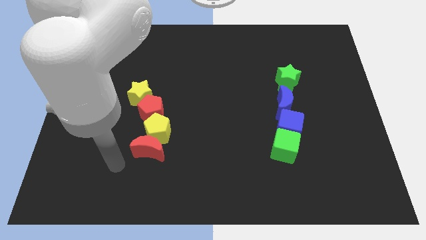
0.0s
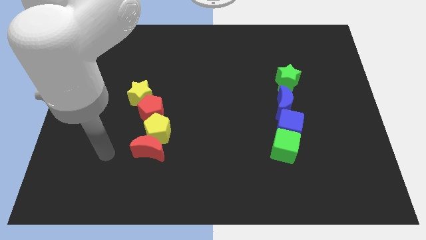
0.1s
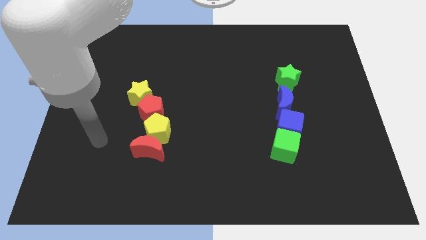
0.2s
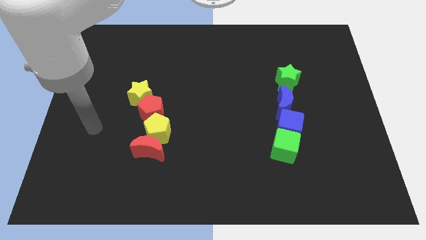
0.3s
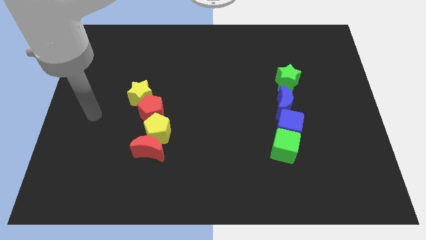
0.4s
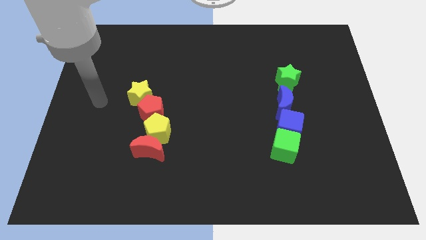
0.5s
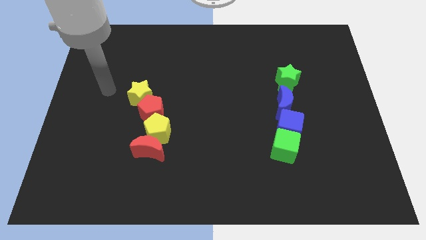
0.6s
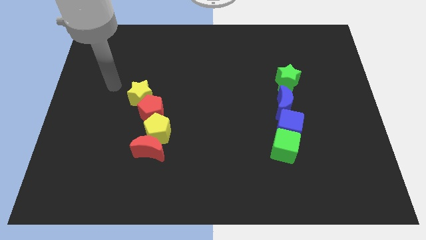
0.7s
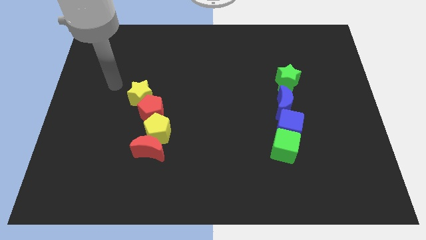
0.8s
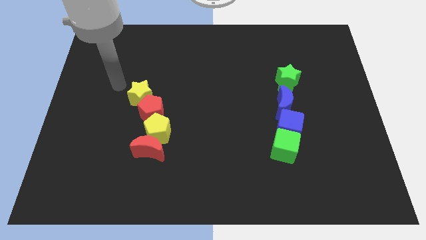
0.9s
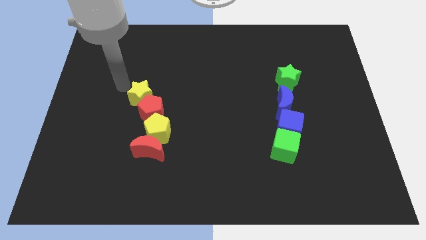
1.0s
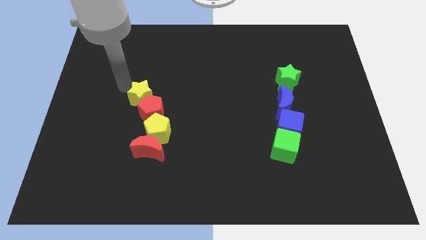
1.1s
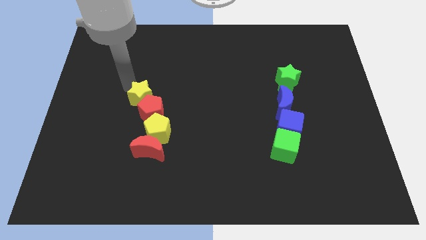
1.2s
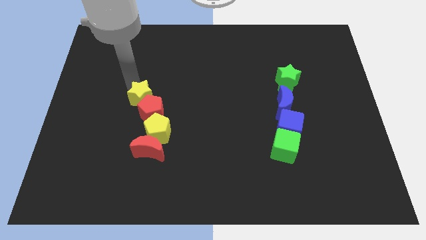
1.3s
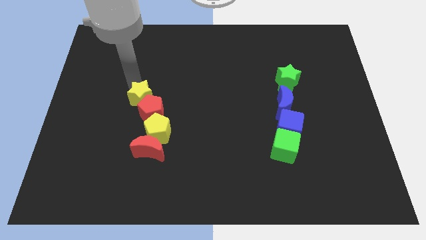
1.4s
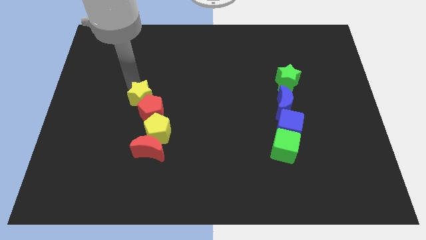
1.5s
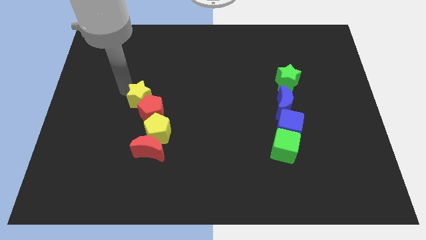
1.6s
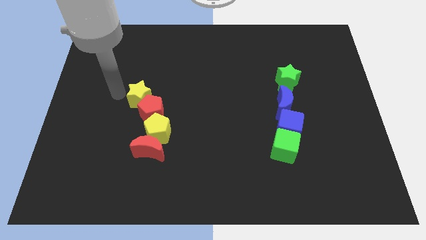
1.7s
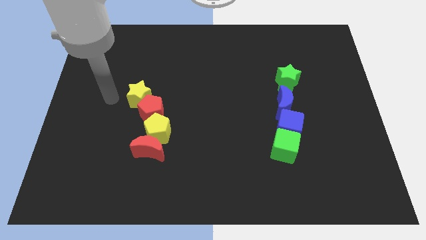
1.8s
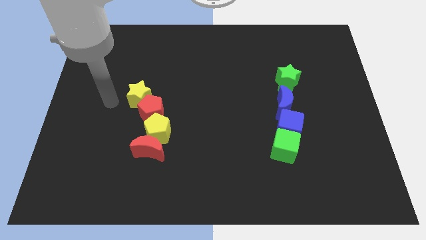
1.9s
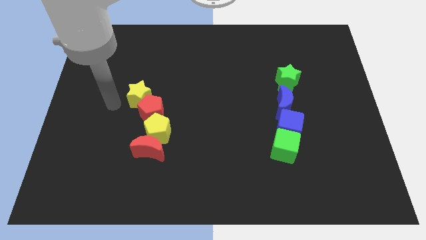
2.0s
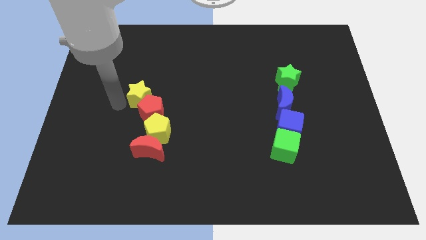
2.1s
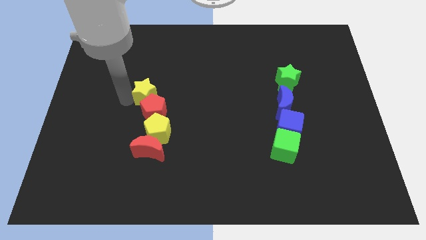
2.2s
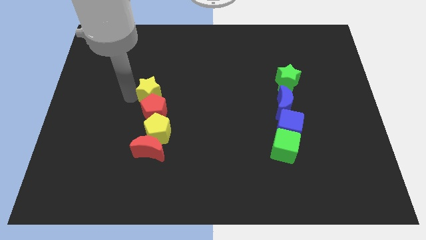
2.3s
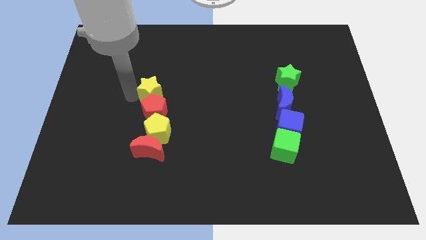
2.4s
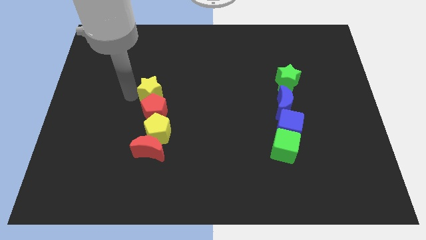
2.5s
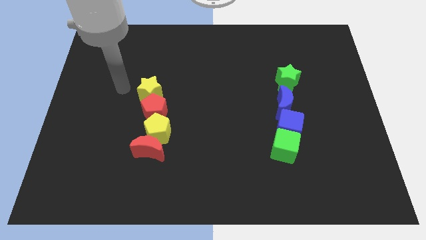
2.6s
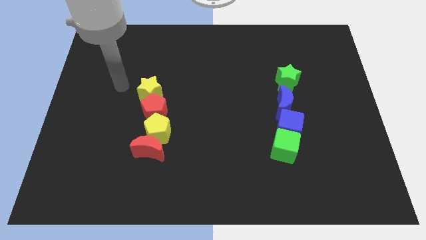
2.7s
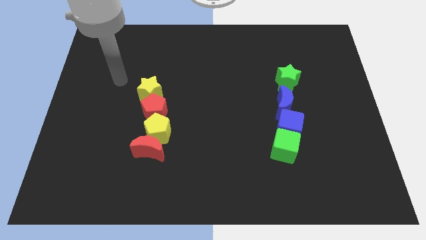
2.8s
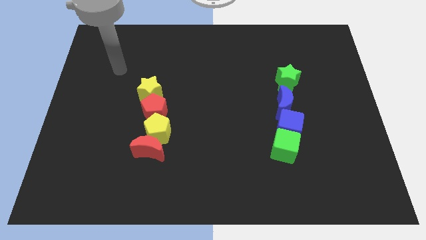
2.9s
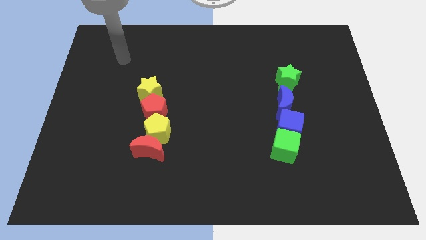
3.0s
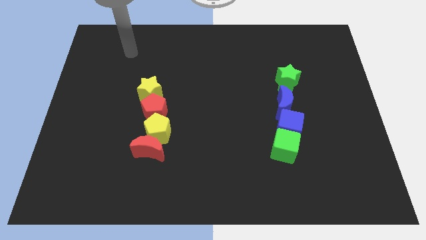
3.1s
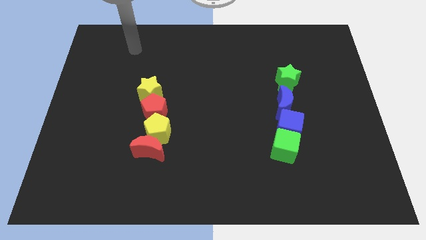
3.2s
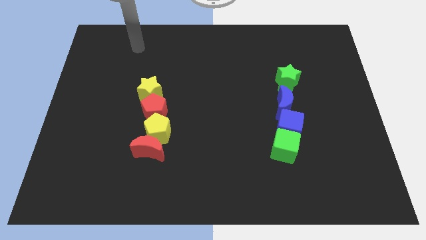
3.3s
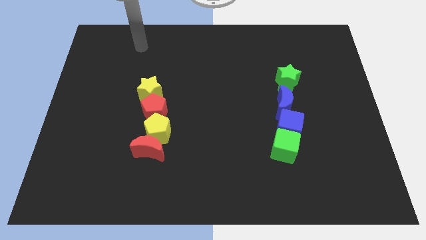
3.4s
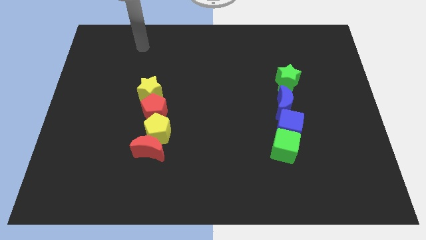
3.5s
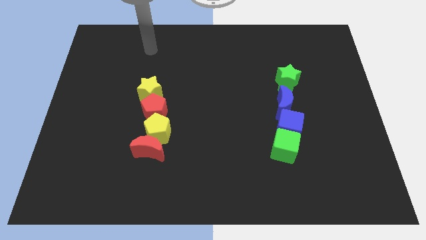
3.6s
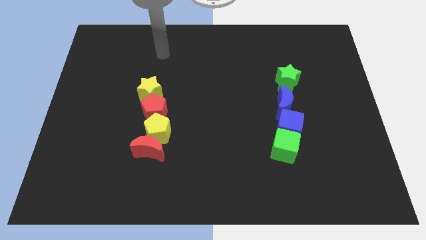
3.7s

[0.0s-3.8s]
slightly push the yellow star to the top of red pentagon

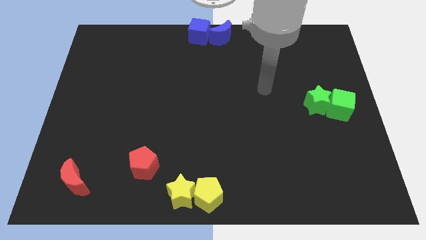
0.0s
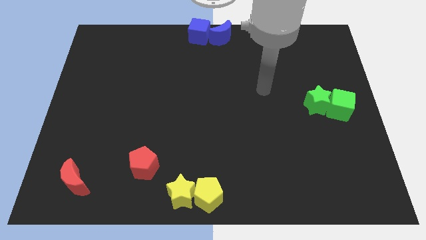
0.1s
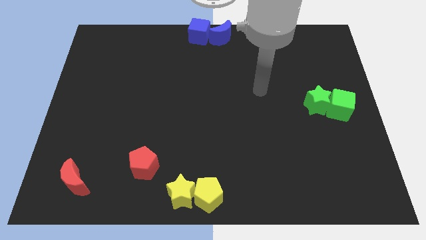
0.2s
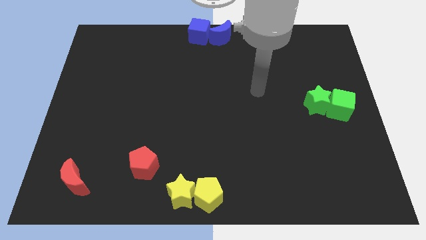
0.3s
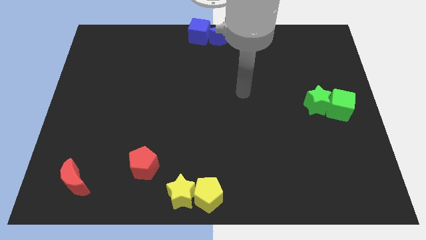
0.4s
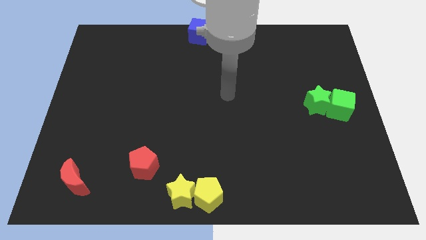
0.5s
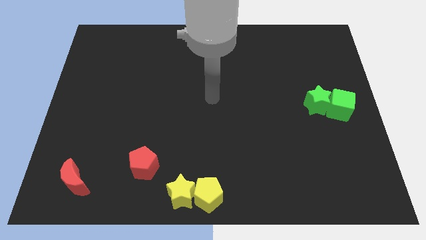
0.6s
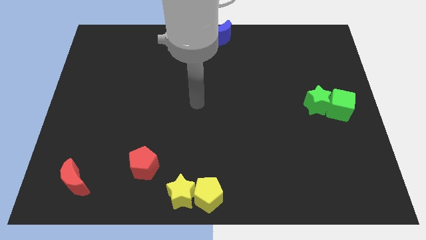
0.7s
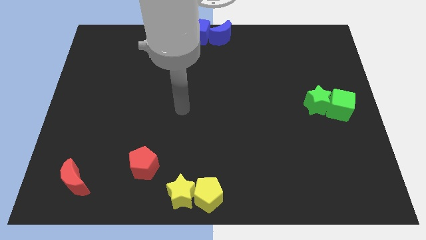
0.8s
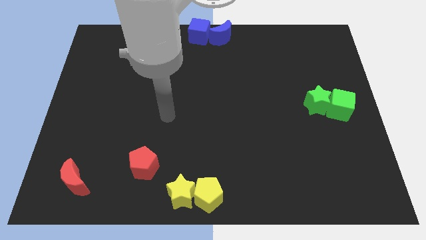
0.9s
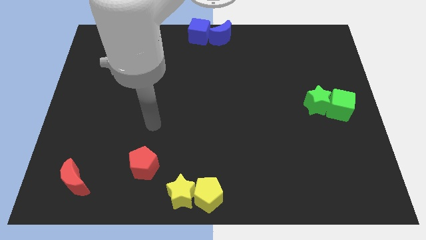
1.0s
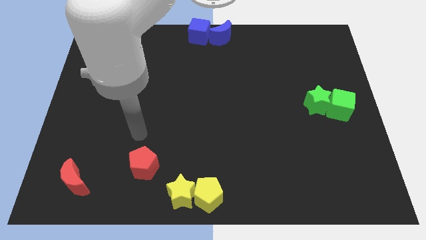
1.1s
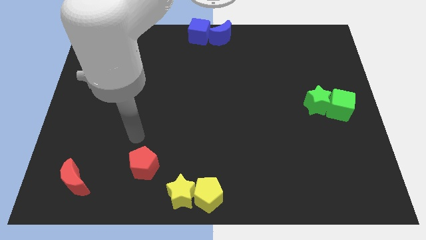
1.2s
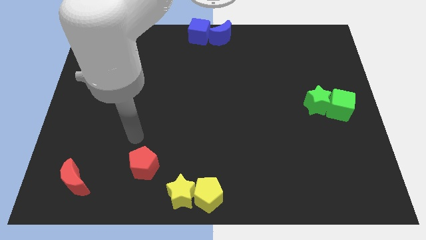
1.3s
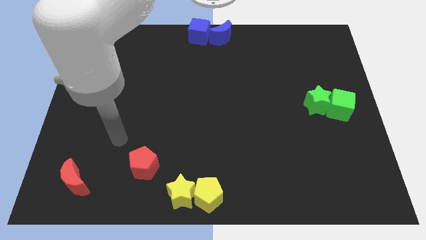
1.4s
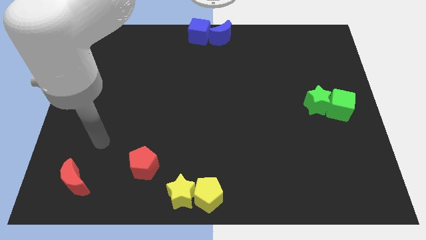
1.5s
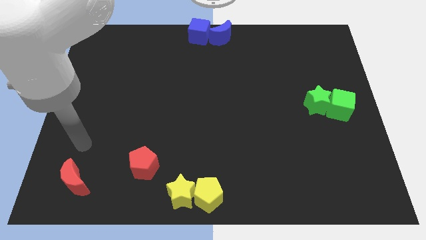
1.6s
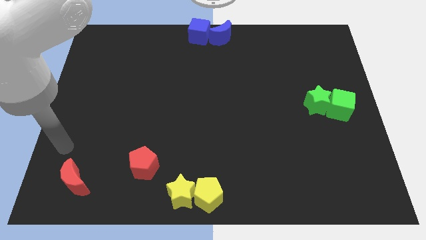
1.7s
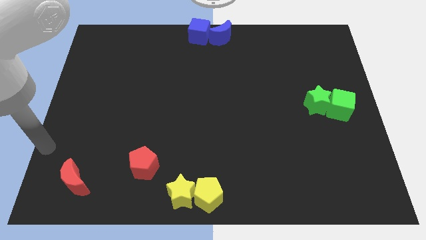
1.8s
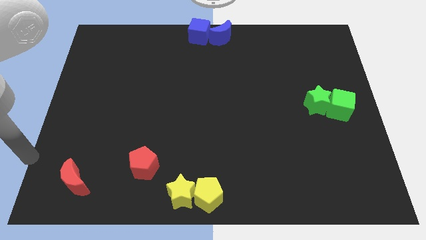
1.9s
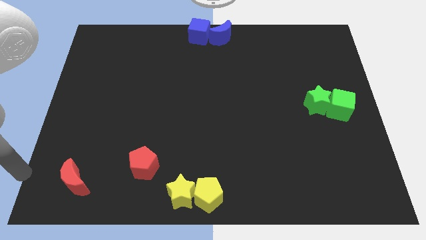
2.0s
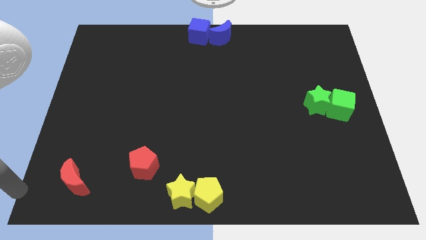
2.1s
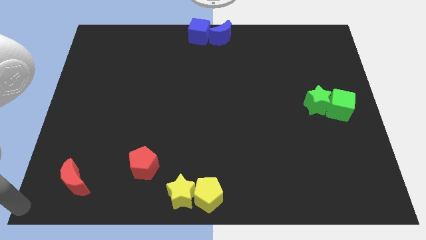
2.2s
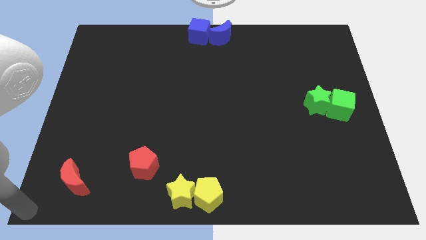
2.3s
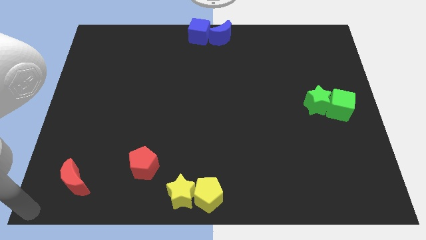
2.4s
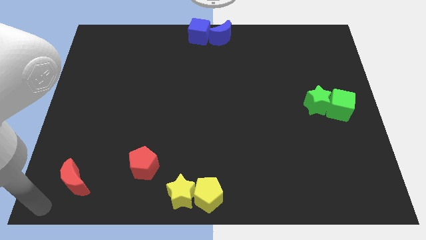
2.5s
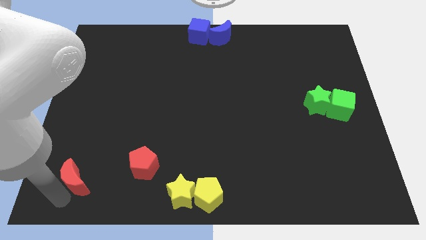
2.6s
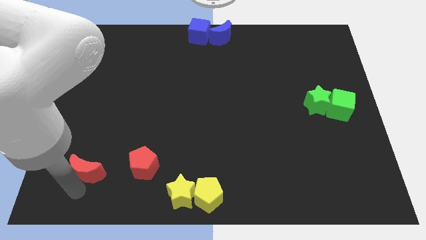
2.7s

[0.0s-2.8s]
place the arm down to the red moon

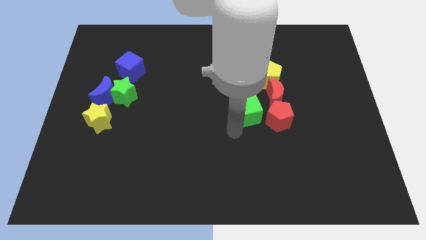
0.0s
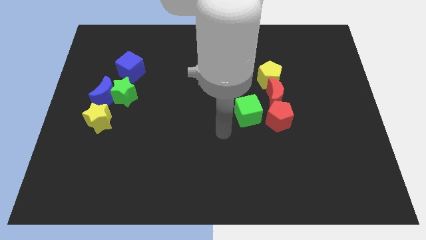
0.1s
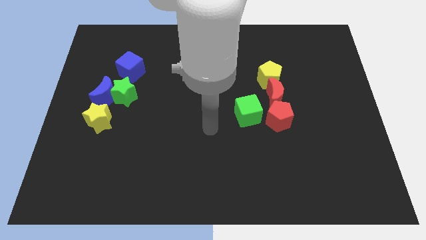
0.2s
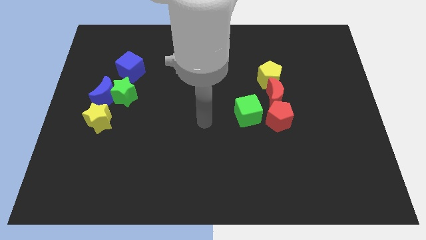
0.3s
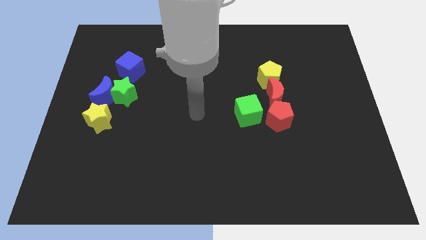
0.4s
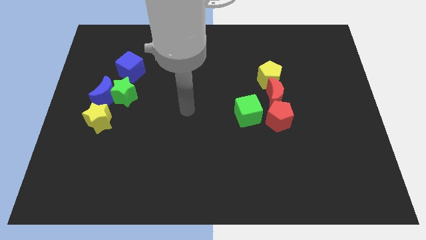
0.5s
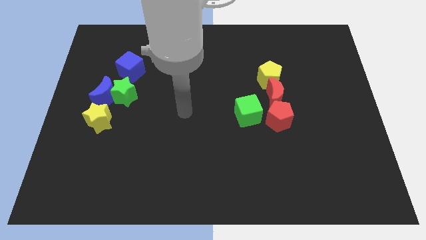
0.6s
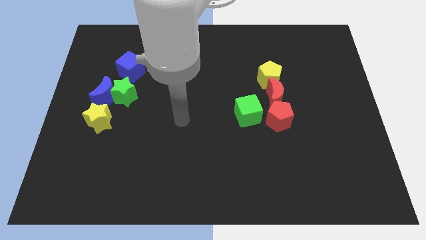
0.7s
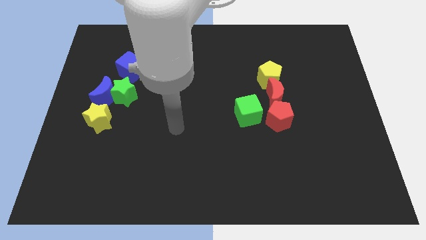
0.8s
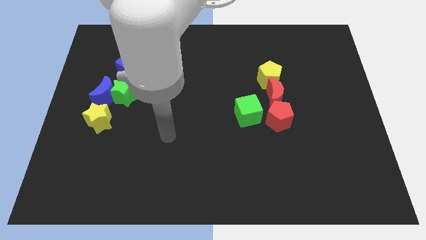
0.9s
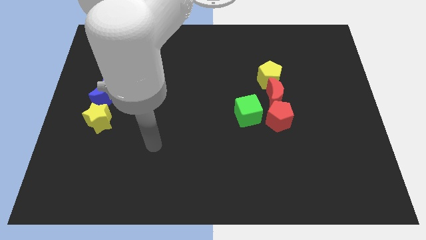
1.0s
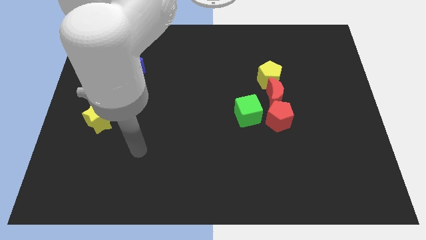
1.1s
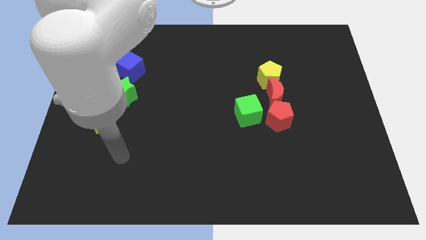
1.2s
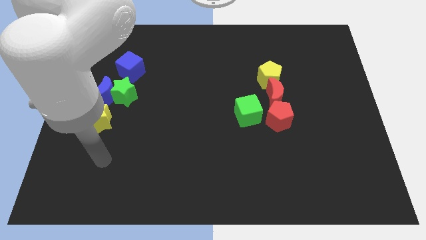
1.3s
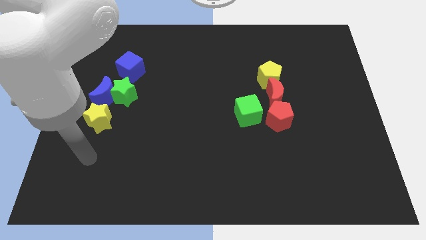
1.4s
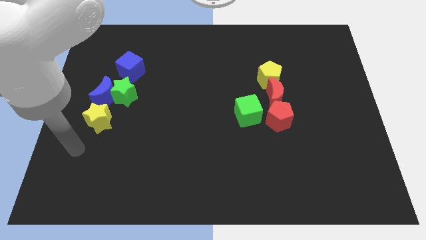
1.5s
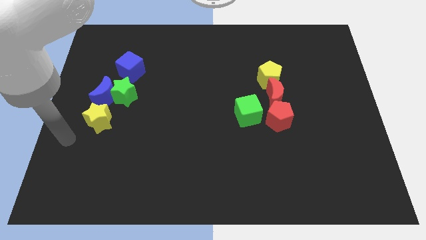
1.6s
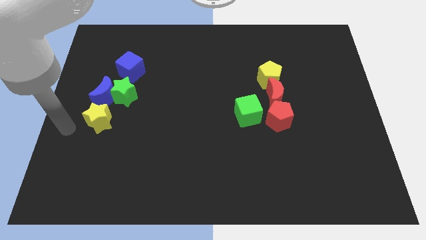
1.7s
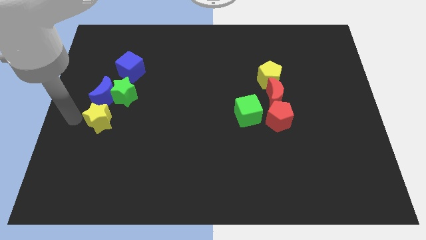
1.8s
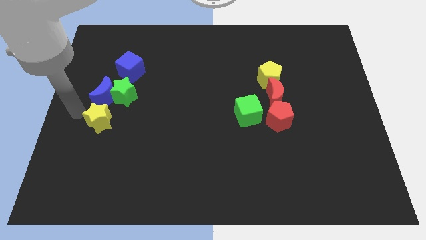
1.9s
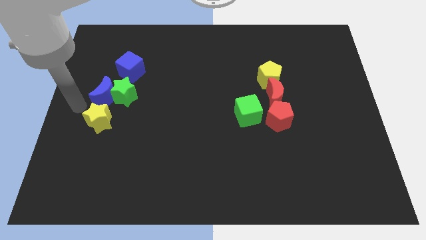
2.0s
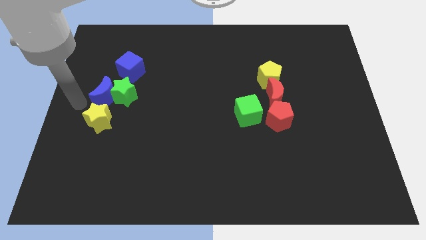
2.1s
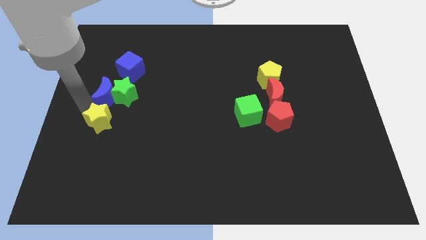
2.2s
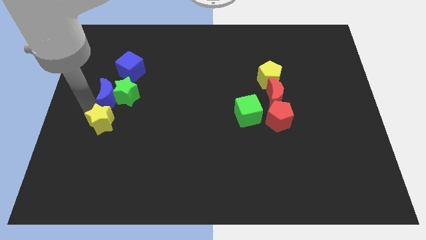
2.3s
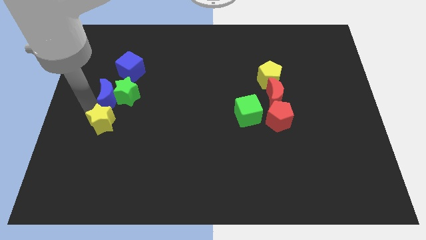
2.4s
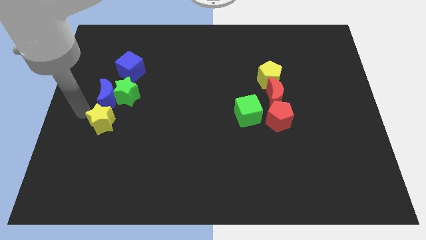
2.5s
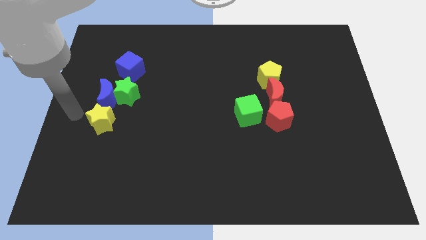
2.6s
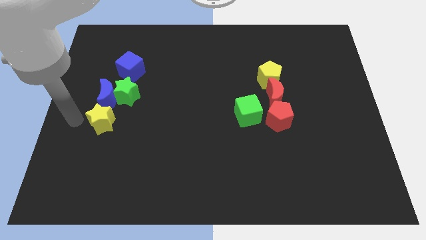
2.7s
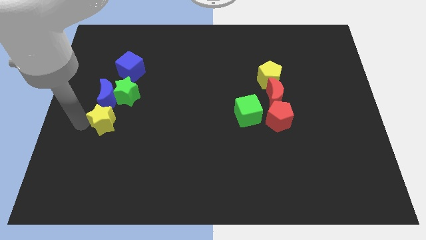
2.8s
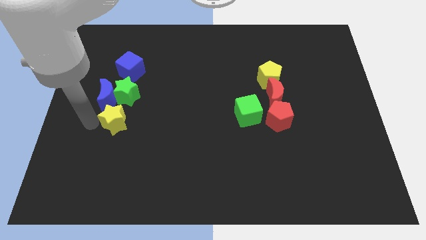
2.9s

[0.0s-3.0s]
move the yellow star to the bottom of the blue crescent
